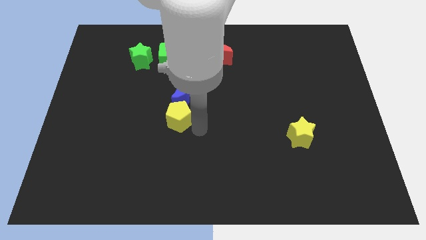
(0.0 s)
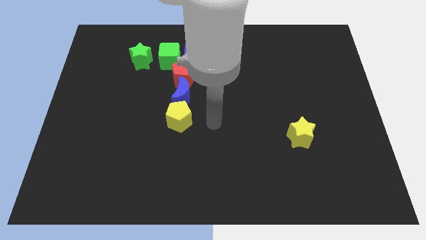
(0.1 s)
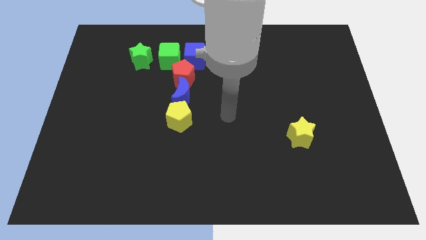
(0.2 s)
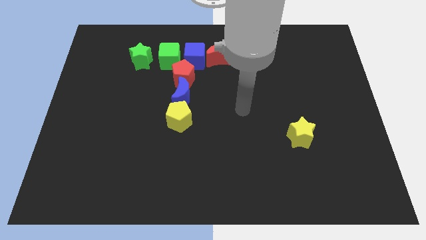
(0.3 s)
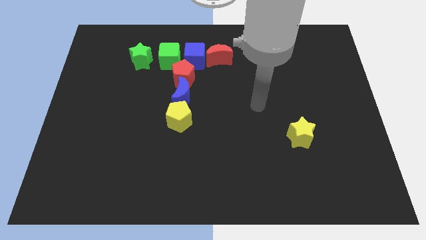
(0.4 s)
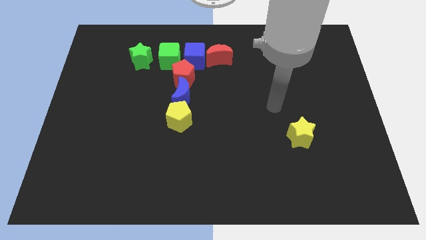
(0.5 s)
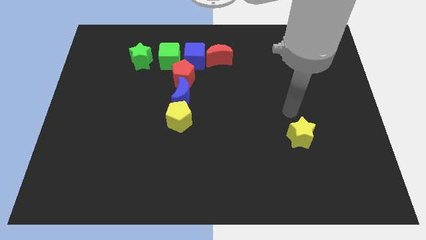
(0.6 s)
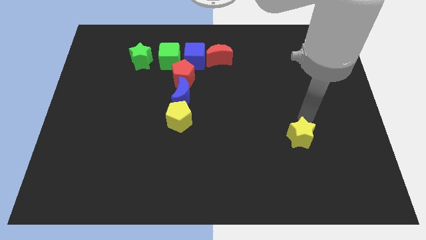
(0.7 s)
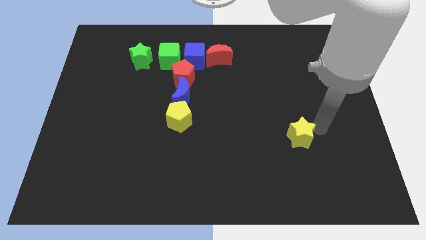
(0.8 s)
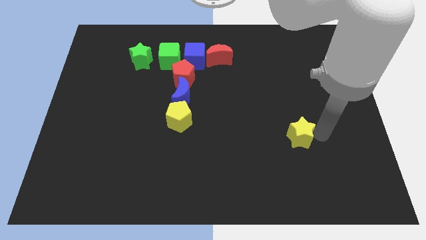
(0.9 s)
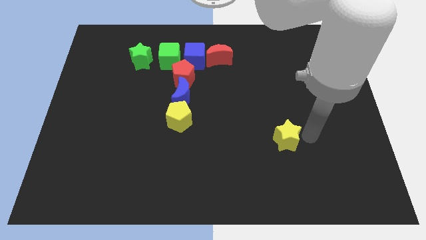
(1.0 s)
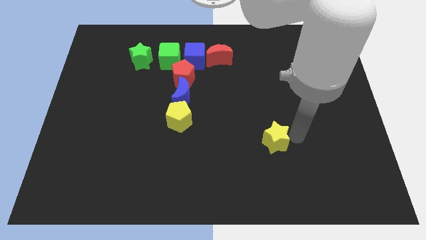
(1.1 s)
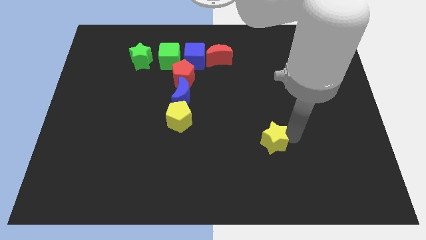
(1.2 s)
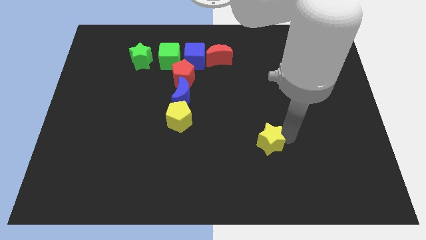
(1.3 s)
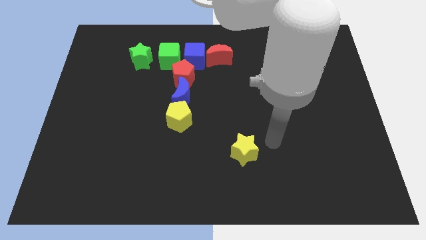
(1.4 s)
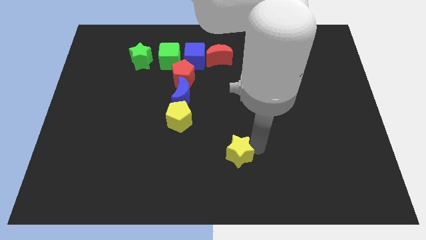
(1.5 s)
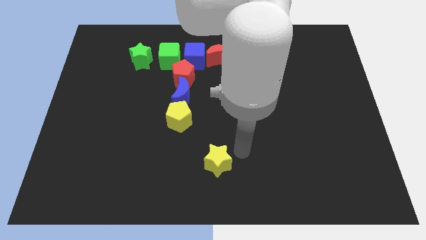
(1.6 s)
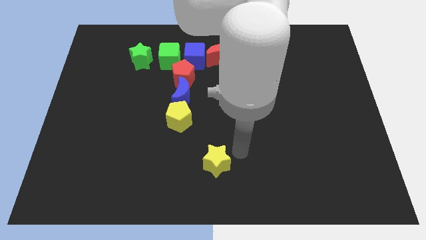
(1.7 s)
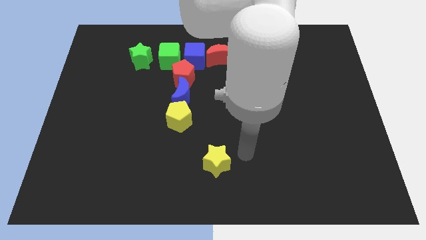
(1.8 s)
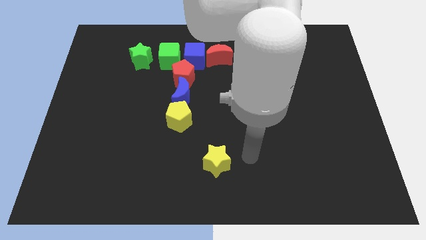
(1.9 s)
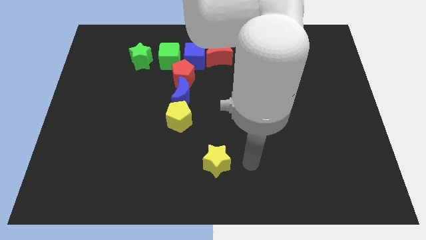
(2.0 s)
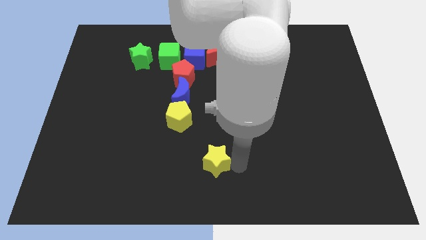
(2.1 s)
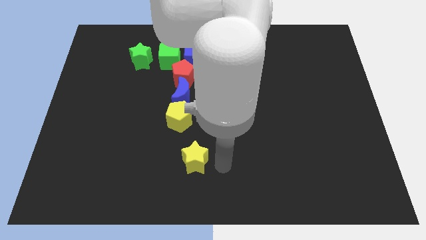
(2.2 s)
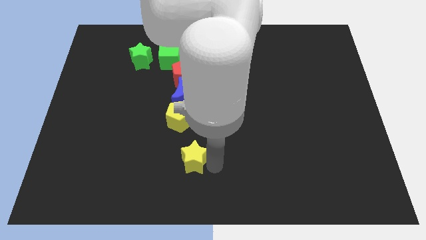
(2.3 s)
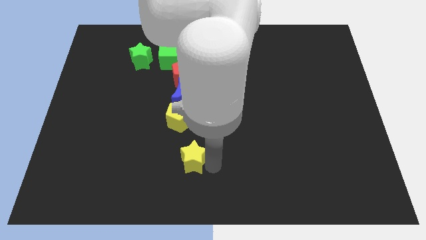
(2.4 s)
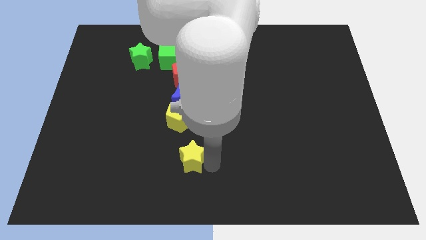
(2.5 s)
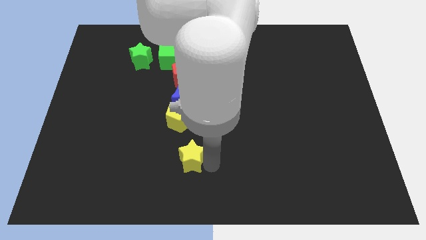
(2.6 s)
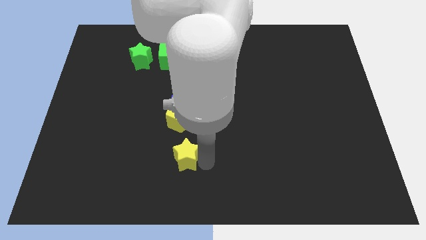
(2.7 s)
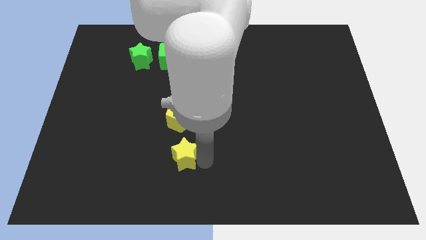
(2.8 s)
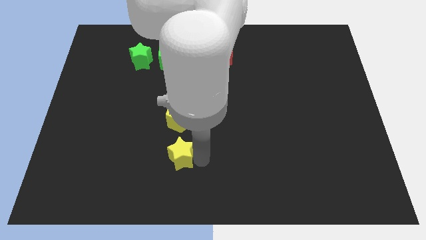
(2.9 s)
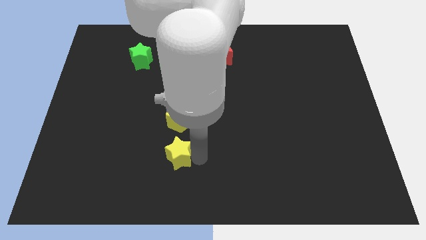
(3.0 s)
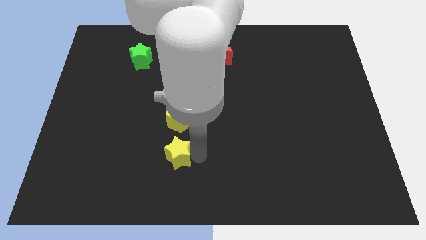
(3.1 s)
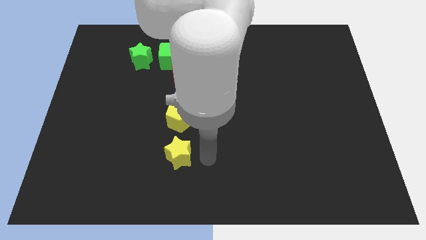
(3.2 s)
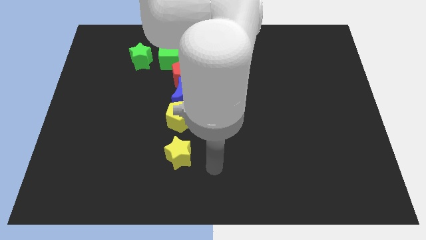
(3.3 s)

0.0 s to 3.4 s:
move the yellow star towards the bottom side of the yellow pentagon

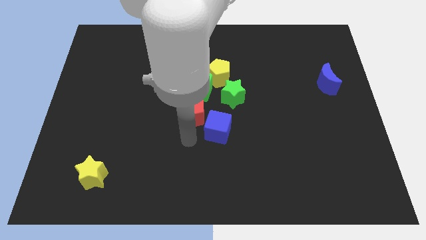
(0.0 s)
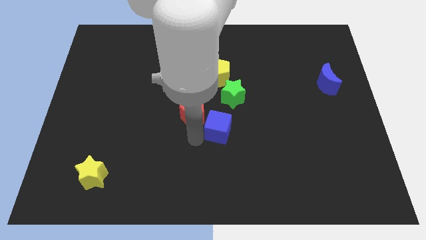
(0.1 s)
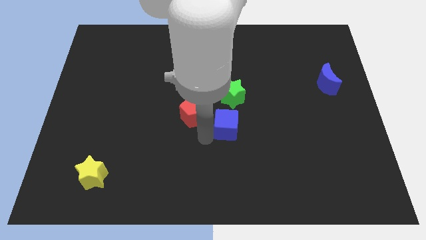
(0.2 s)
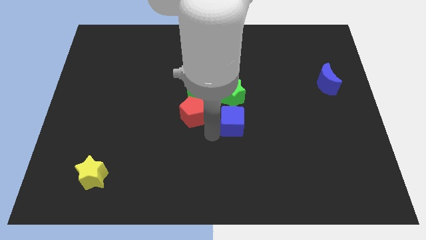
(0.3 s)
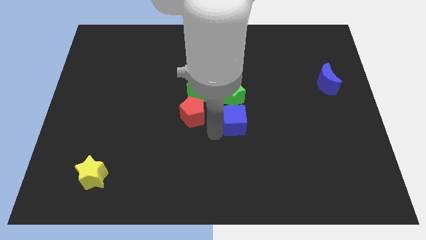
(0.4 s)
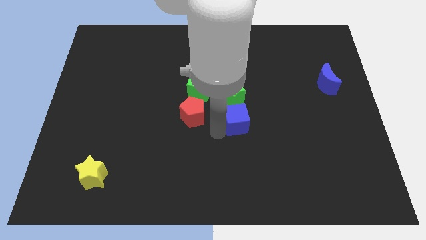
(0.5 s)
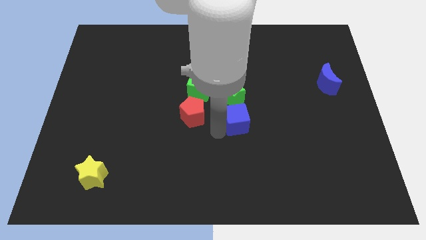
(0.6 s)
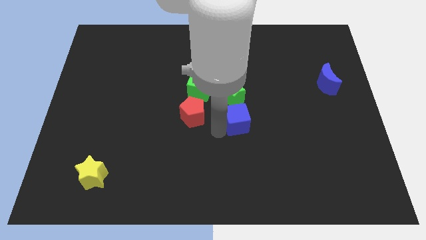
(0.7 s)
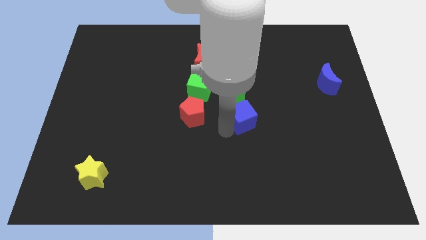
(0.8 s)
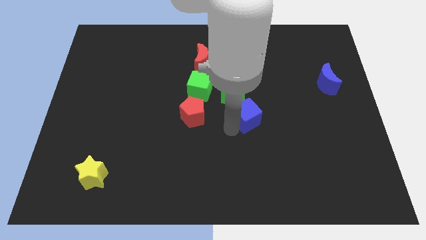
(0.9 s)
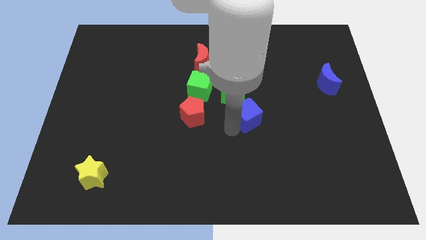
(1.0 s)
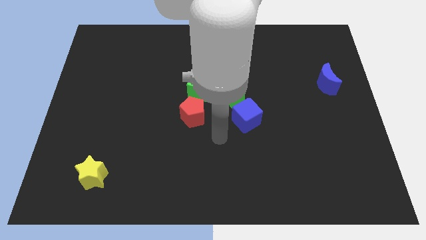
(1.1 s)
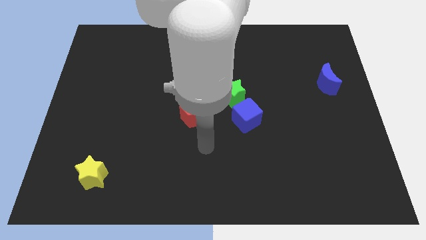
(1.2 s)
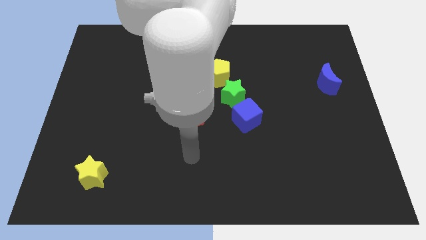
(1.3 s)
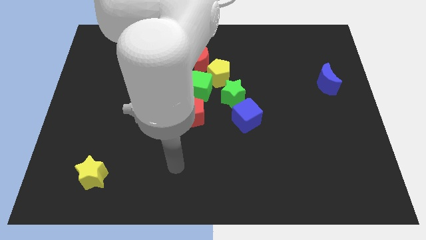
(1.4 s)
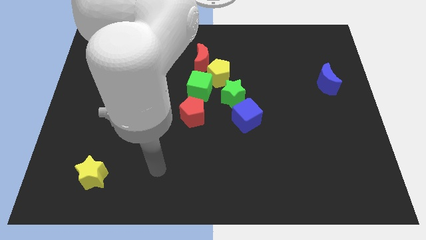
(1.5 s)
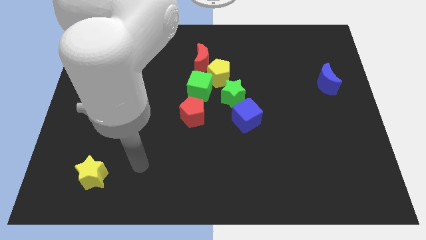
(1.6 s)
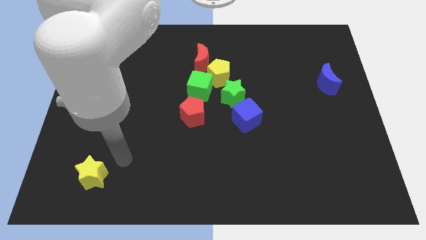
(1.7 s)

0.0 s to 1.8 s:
push blue cube bottom of the green star

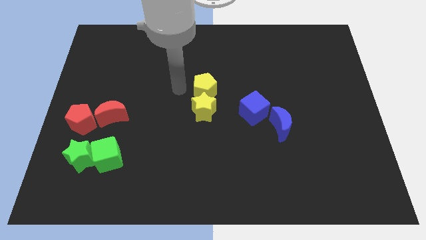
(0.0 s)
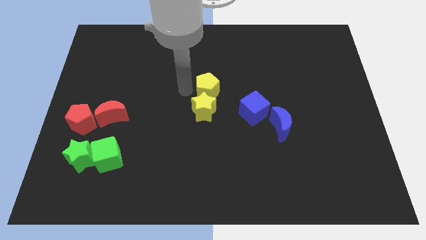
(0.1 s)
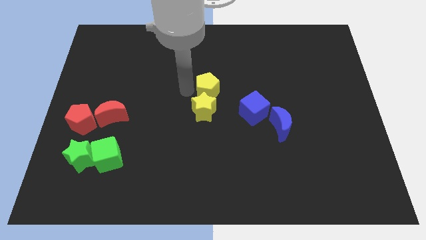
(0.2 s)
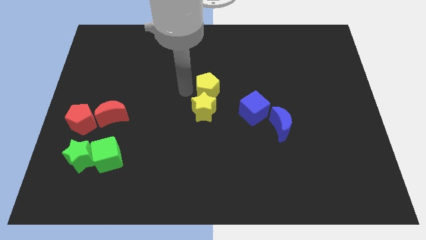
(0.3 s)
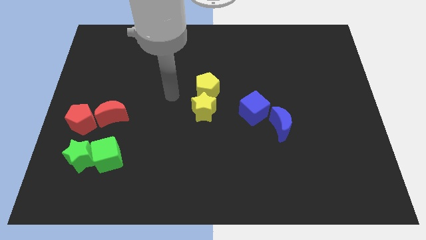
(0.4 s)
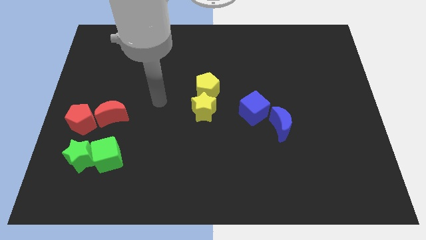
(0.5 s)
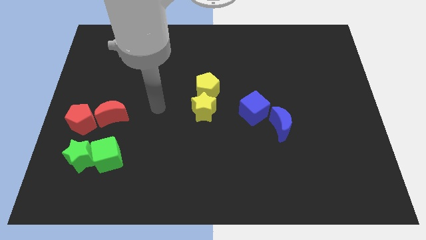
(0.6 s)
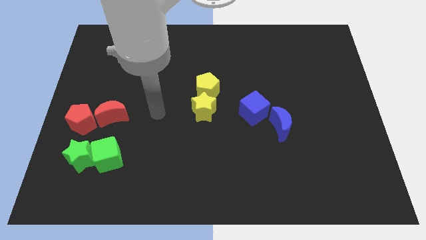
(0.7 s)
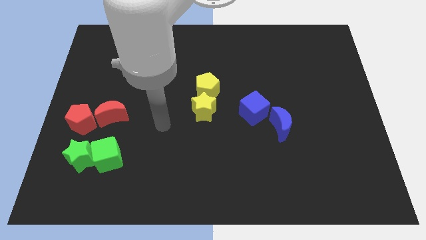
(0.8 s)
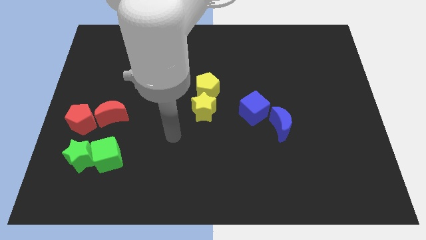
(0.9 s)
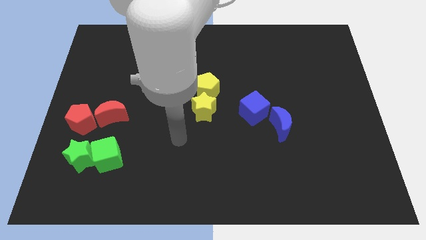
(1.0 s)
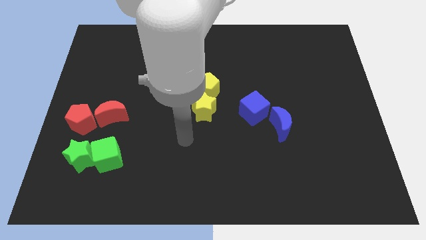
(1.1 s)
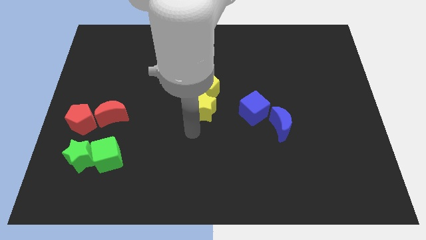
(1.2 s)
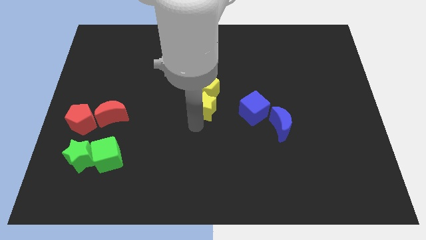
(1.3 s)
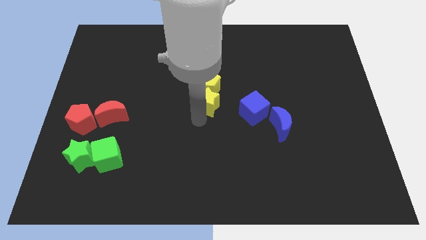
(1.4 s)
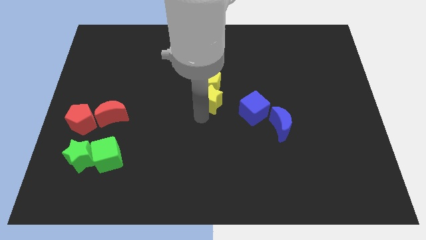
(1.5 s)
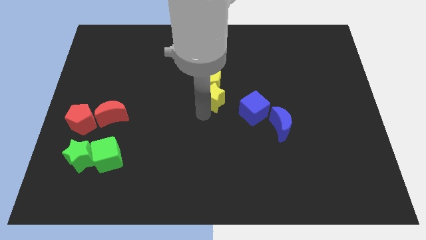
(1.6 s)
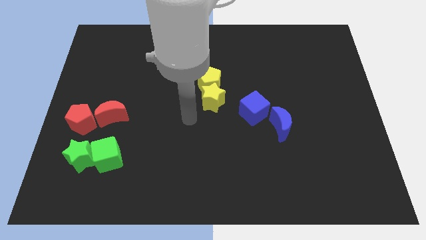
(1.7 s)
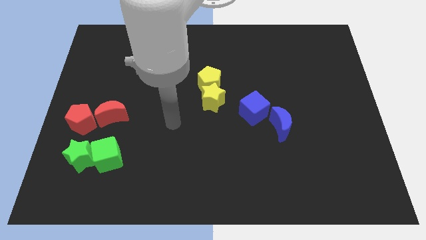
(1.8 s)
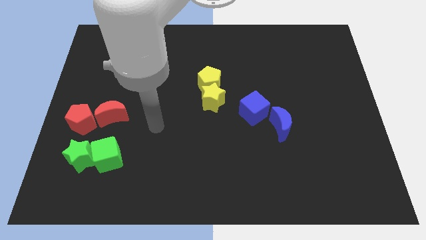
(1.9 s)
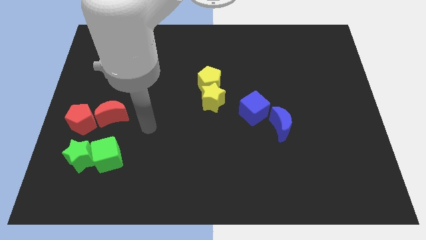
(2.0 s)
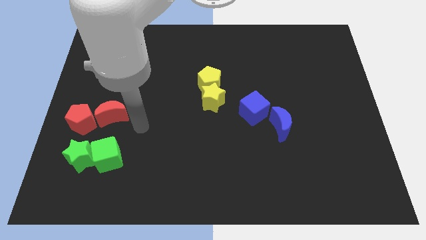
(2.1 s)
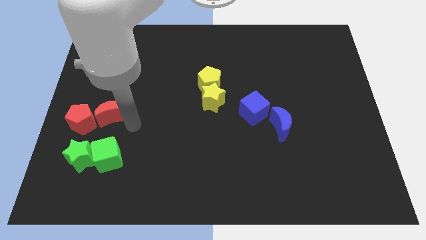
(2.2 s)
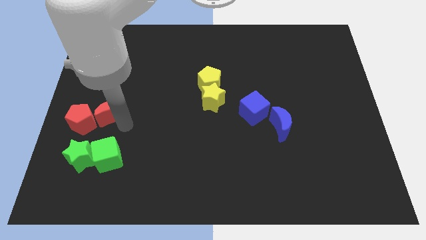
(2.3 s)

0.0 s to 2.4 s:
move arm near red moon

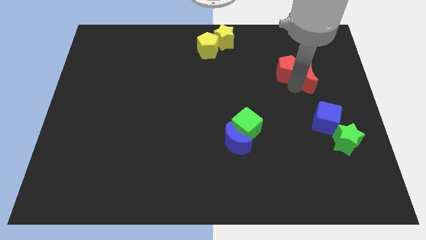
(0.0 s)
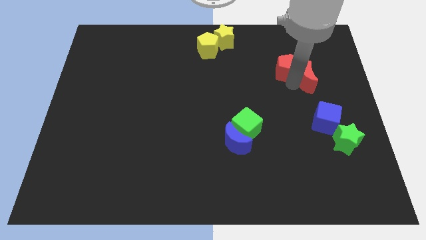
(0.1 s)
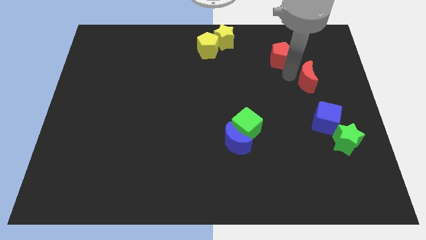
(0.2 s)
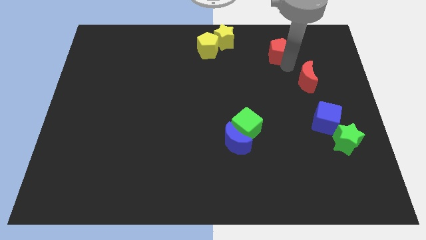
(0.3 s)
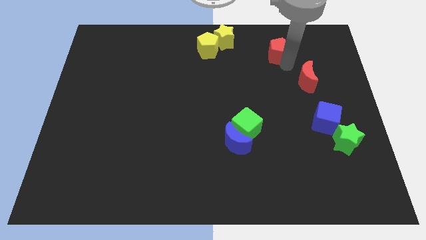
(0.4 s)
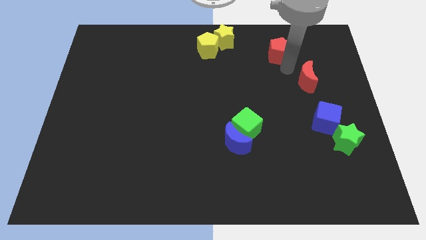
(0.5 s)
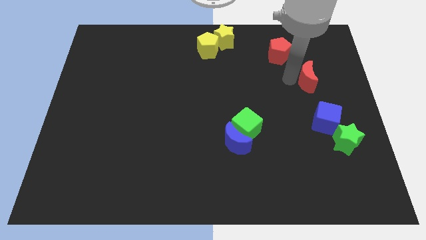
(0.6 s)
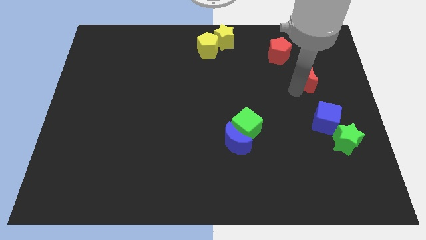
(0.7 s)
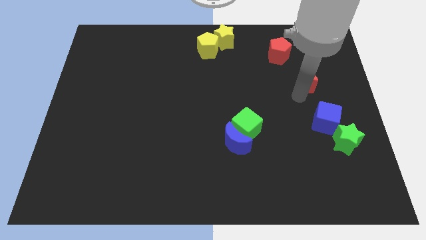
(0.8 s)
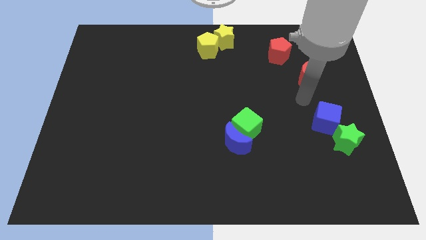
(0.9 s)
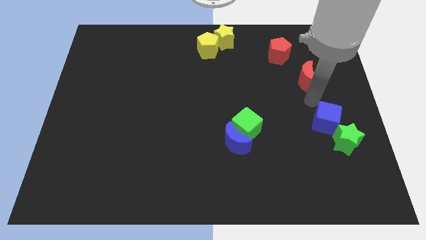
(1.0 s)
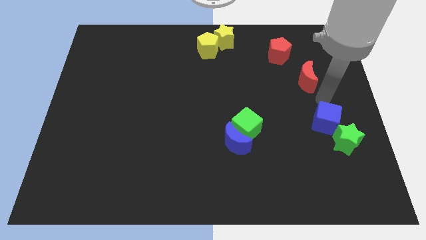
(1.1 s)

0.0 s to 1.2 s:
move the arm in between the blue cube and red crescent

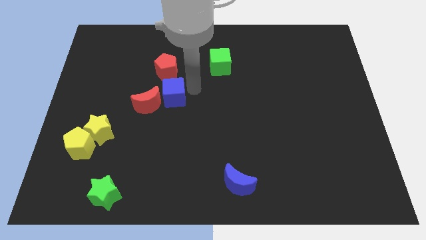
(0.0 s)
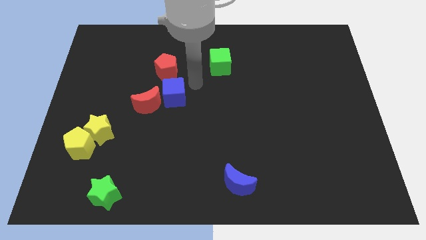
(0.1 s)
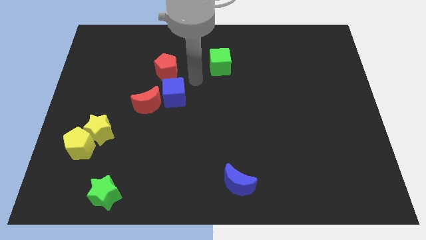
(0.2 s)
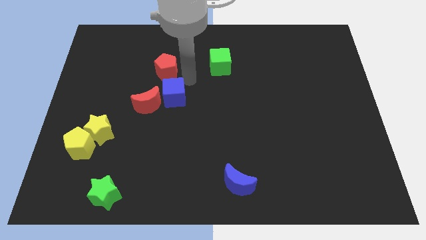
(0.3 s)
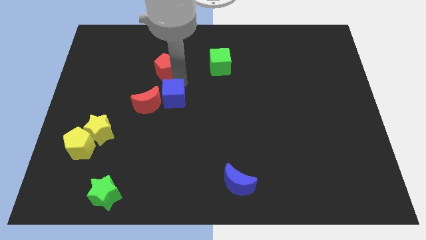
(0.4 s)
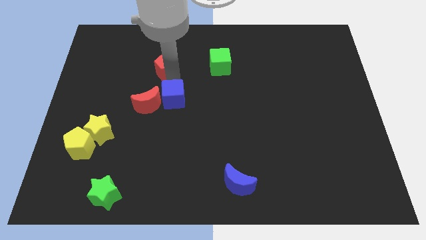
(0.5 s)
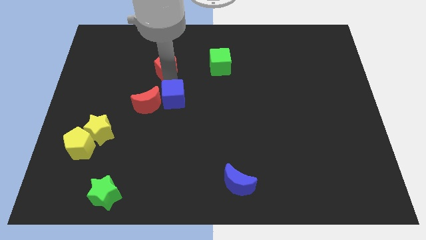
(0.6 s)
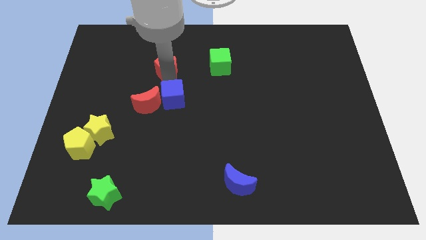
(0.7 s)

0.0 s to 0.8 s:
place blue cube on the right side of red moon
